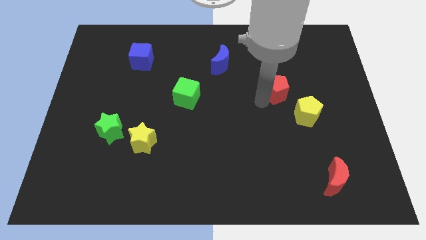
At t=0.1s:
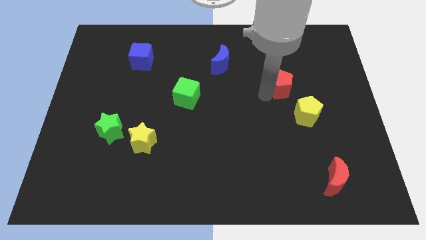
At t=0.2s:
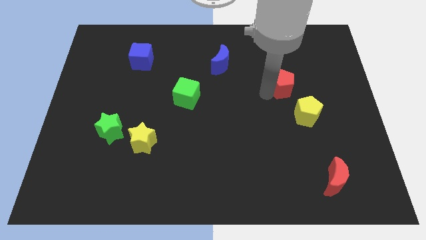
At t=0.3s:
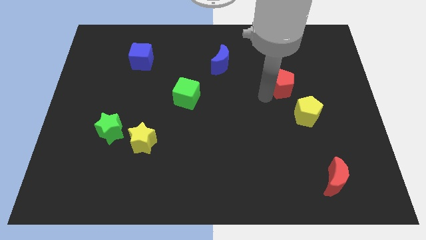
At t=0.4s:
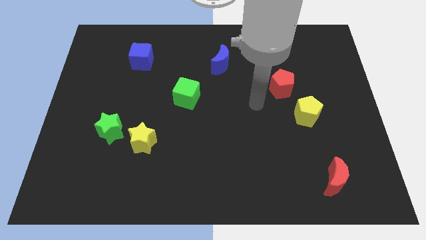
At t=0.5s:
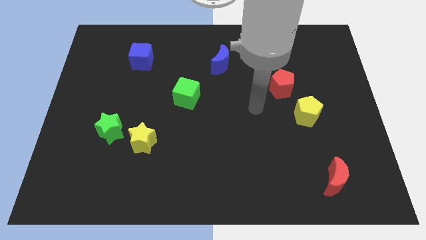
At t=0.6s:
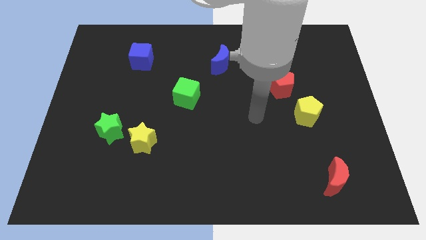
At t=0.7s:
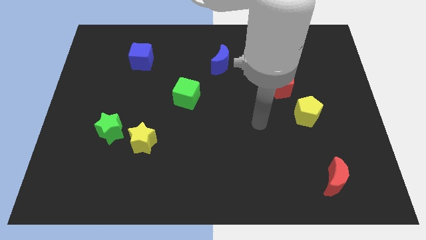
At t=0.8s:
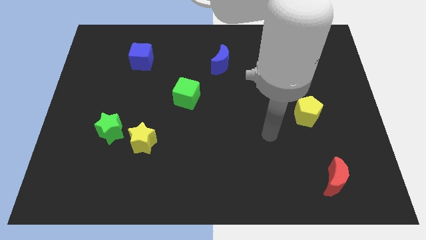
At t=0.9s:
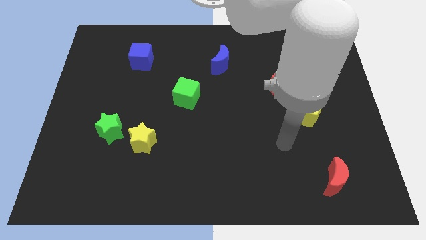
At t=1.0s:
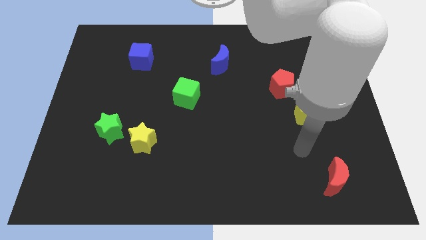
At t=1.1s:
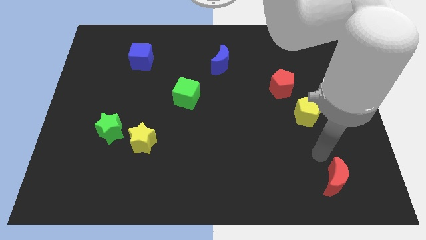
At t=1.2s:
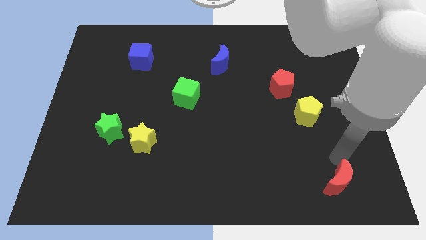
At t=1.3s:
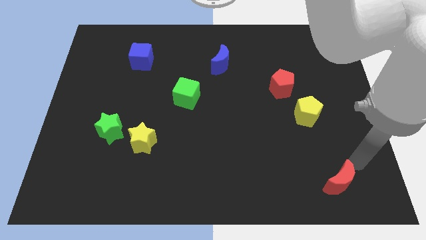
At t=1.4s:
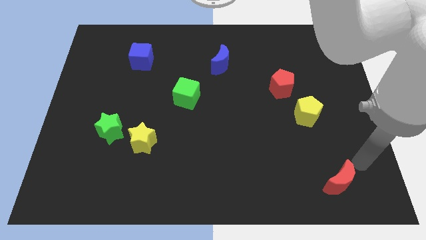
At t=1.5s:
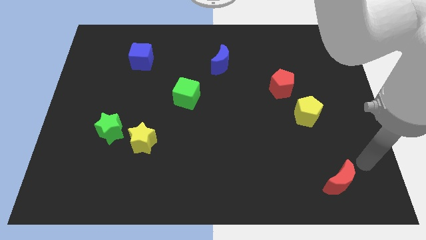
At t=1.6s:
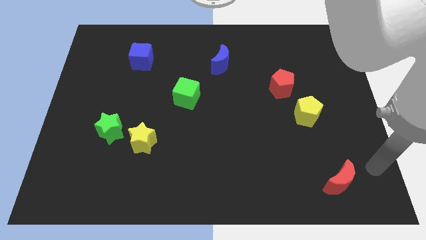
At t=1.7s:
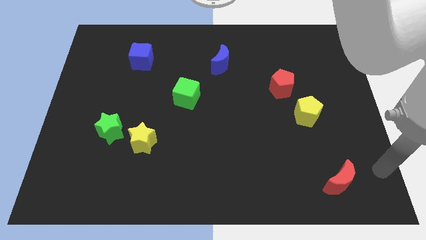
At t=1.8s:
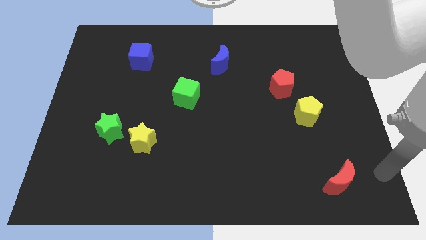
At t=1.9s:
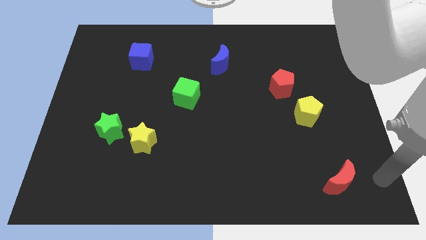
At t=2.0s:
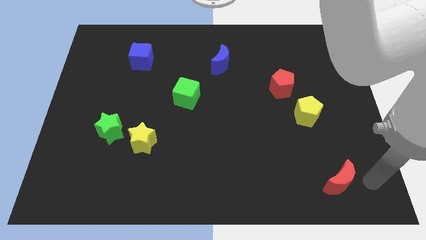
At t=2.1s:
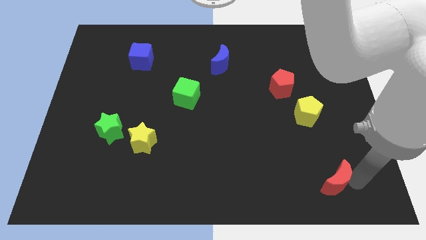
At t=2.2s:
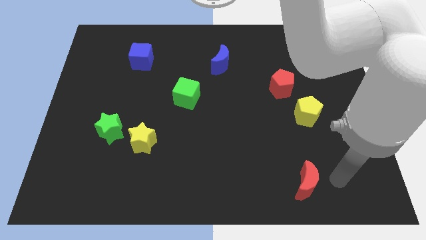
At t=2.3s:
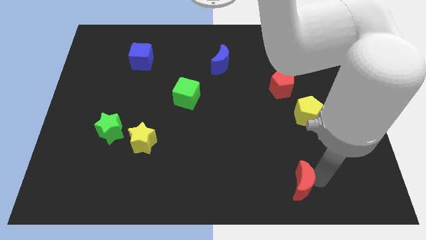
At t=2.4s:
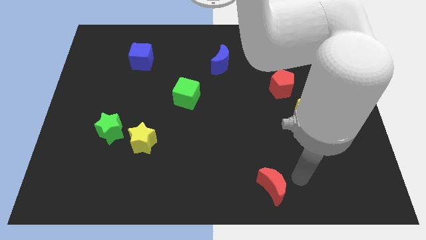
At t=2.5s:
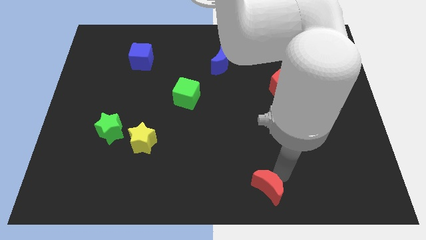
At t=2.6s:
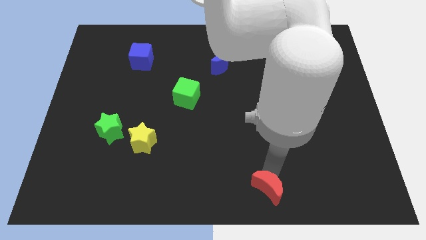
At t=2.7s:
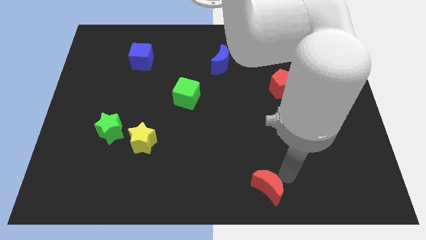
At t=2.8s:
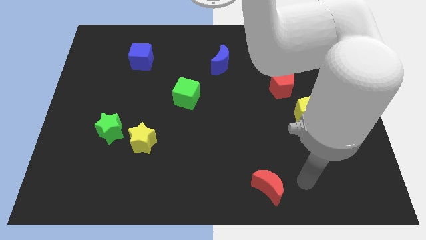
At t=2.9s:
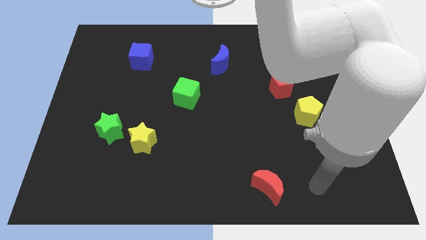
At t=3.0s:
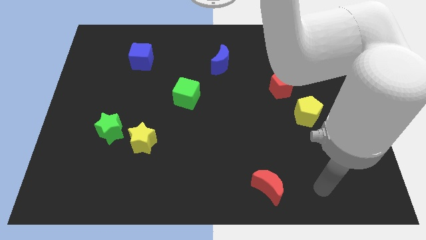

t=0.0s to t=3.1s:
push red crescent to the bottom center of the board

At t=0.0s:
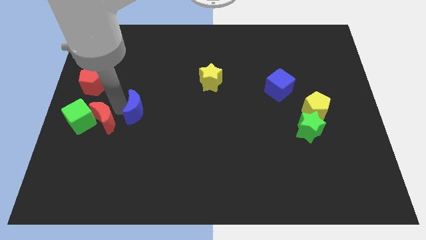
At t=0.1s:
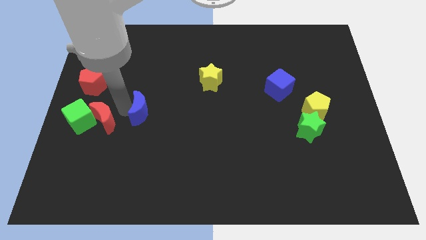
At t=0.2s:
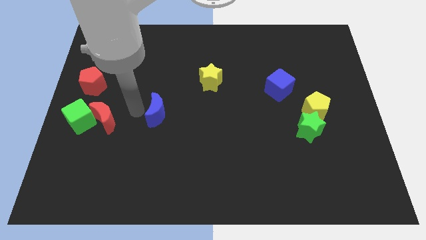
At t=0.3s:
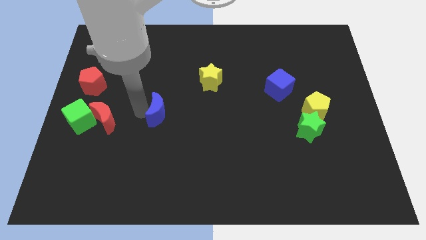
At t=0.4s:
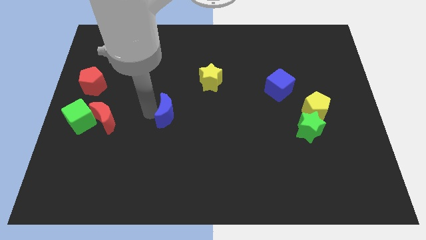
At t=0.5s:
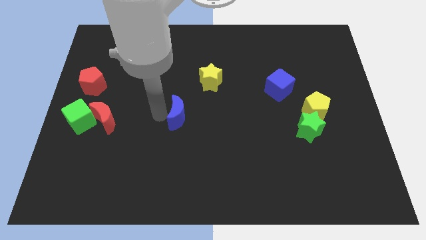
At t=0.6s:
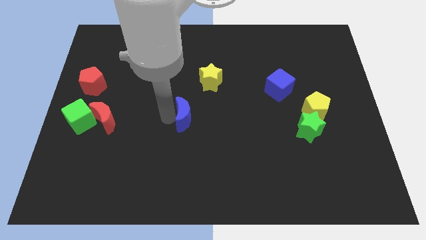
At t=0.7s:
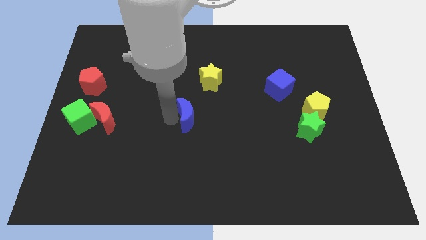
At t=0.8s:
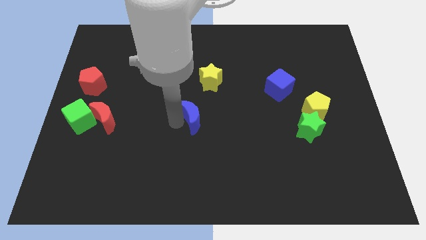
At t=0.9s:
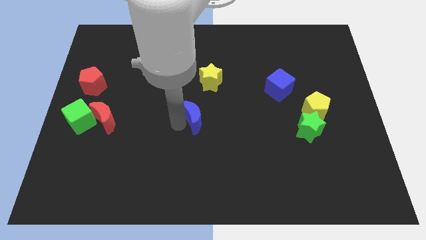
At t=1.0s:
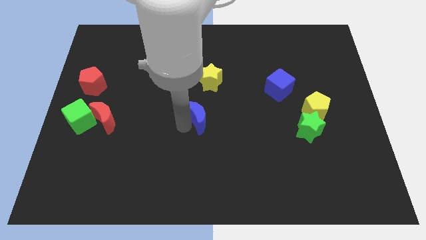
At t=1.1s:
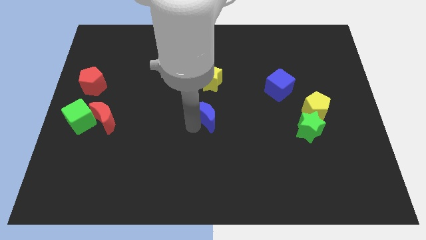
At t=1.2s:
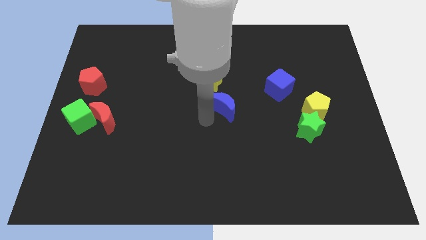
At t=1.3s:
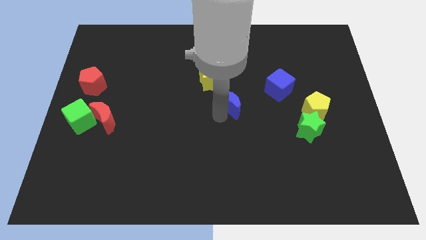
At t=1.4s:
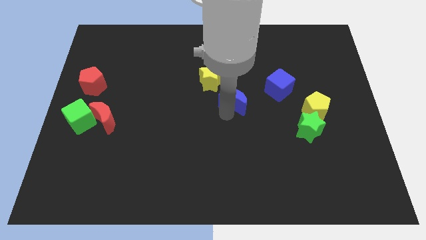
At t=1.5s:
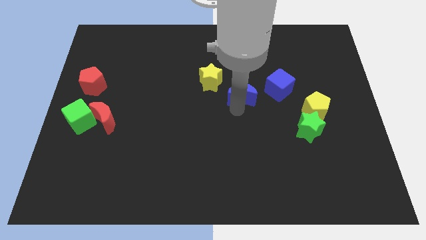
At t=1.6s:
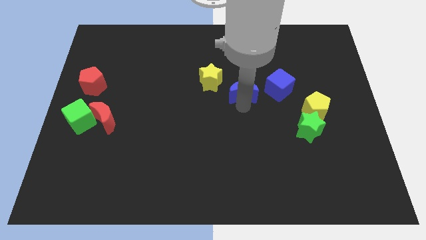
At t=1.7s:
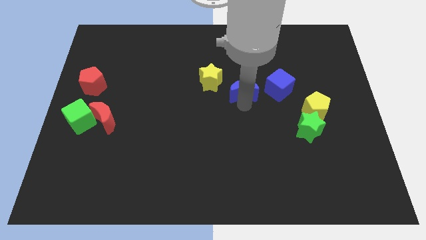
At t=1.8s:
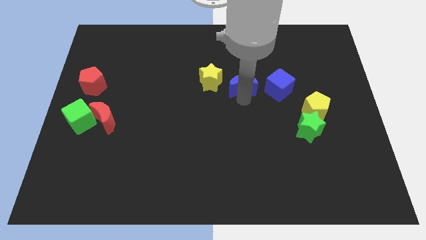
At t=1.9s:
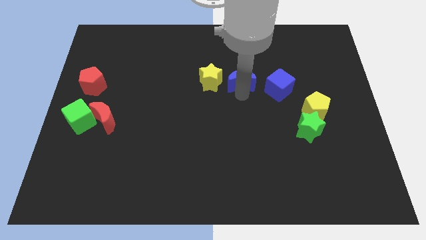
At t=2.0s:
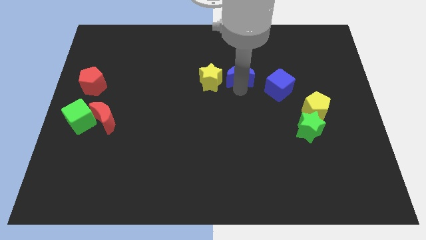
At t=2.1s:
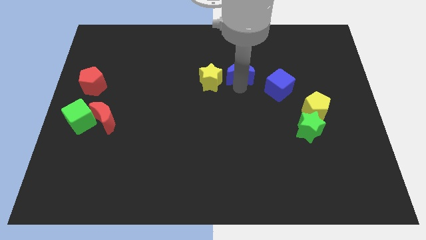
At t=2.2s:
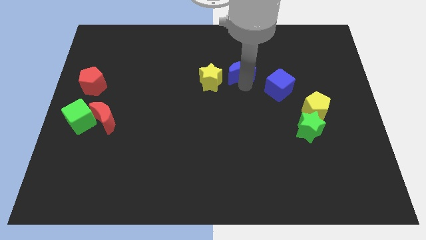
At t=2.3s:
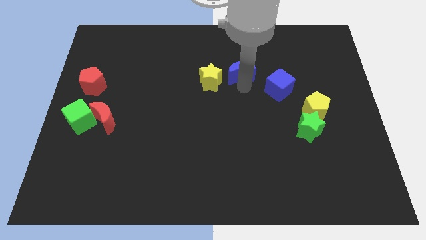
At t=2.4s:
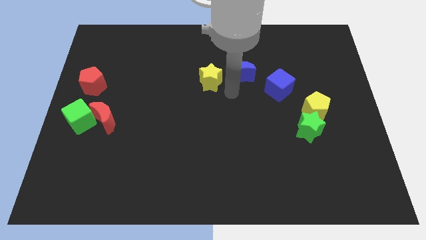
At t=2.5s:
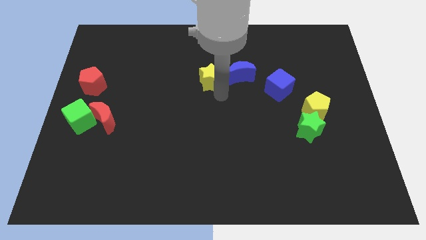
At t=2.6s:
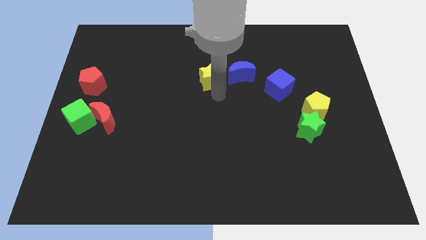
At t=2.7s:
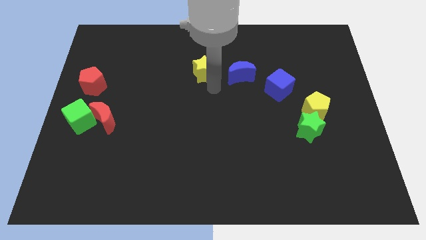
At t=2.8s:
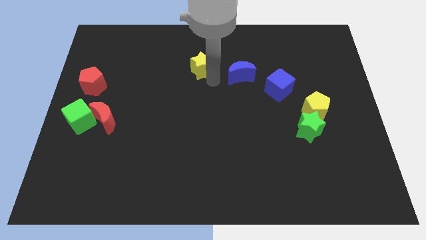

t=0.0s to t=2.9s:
put the blue moon right to the yellow star

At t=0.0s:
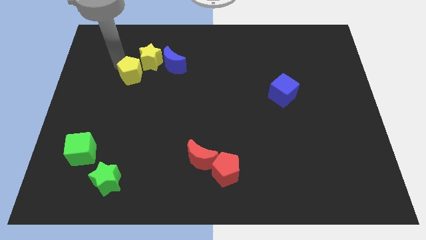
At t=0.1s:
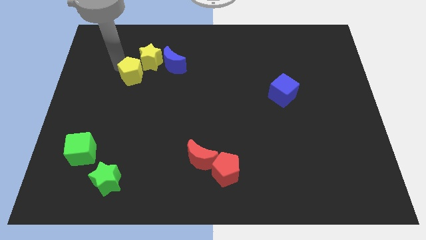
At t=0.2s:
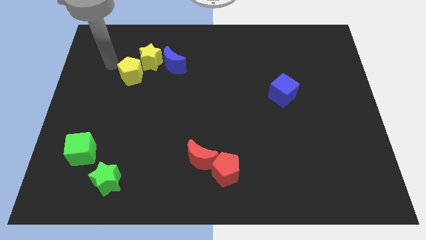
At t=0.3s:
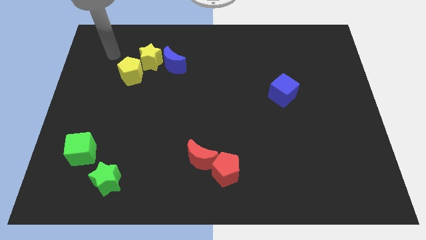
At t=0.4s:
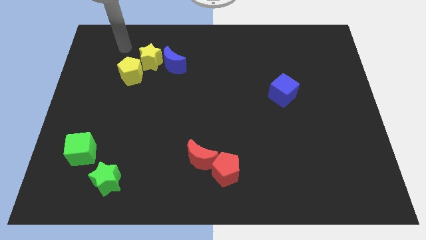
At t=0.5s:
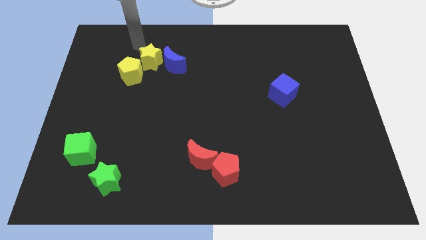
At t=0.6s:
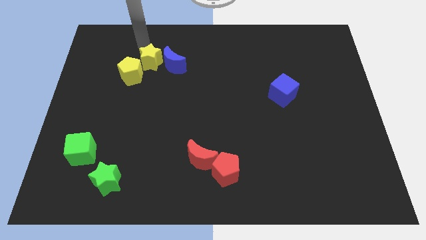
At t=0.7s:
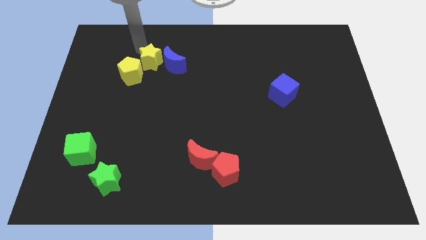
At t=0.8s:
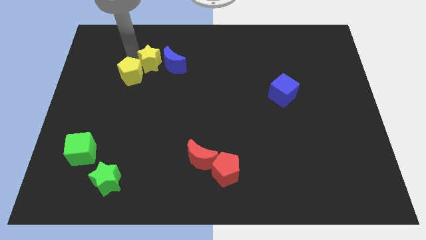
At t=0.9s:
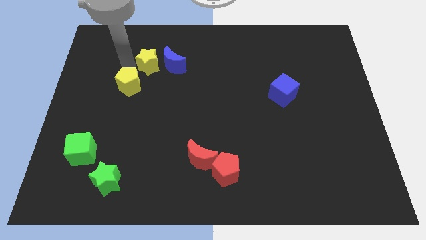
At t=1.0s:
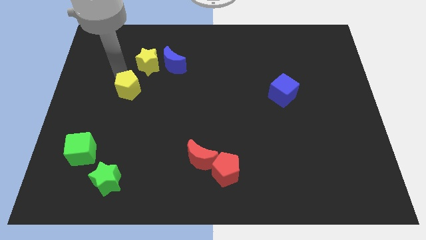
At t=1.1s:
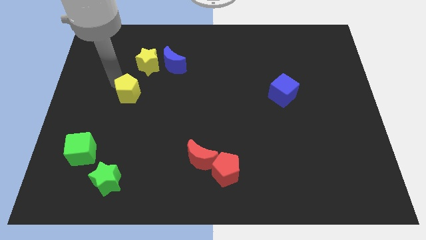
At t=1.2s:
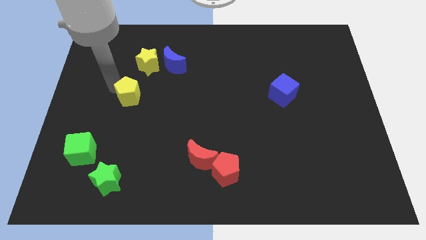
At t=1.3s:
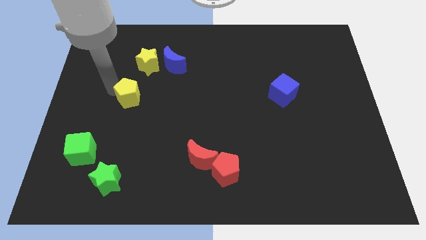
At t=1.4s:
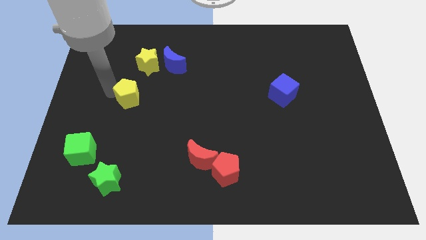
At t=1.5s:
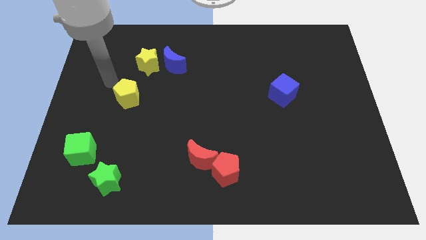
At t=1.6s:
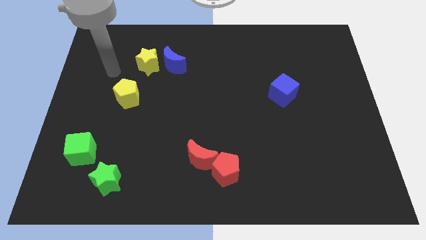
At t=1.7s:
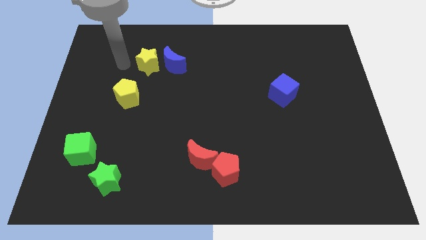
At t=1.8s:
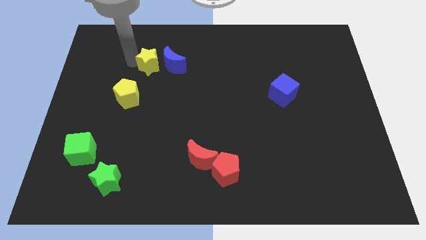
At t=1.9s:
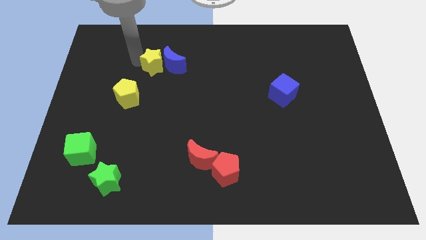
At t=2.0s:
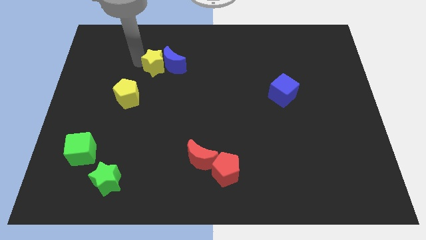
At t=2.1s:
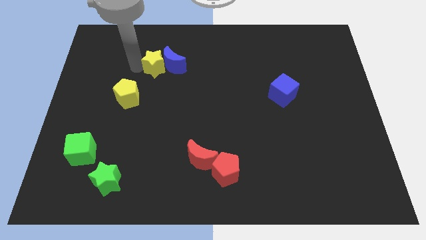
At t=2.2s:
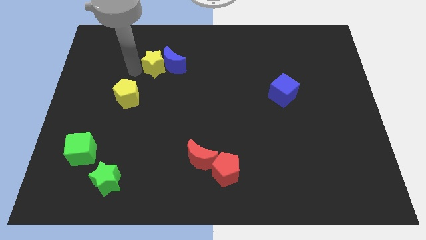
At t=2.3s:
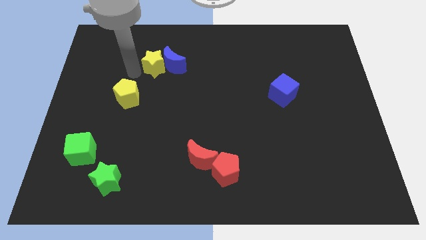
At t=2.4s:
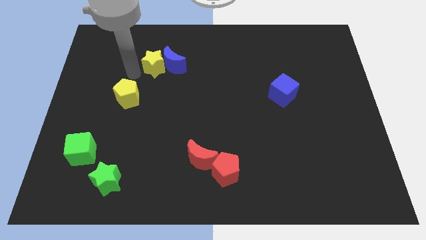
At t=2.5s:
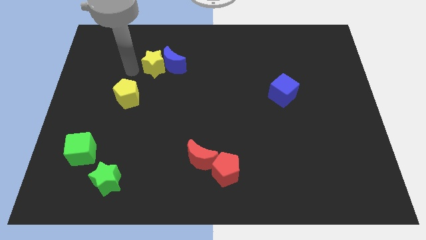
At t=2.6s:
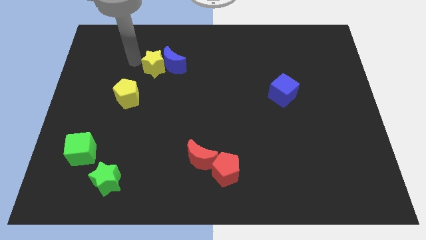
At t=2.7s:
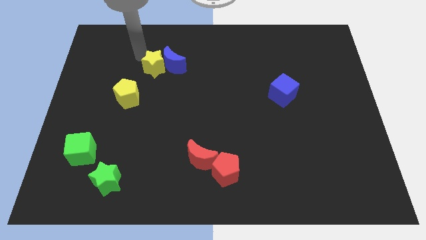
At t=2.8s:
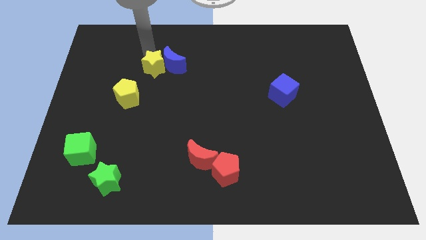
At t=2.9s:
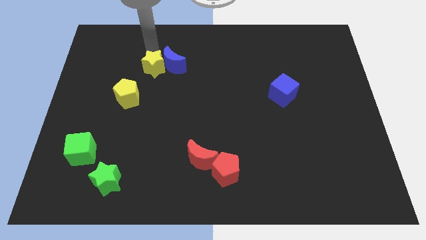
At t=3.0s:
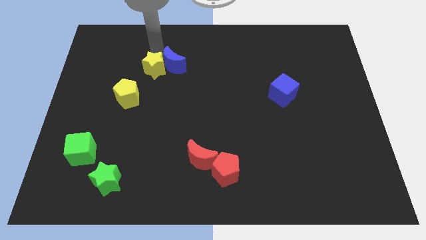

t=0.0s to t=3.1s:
move the yellow pentagon far from the yellow star
